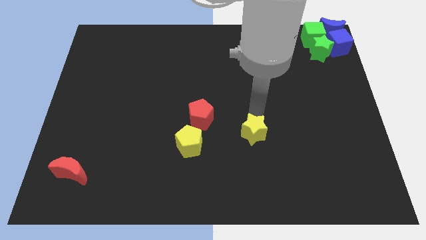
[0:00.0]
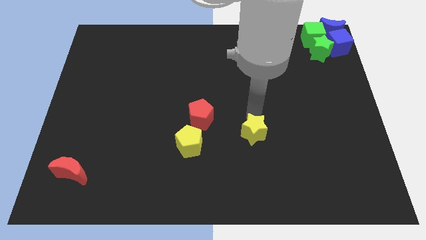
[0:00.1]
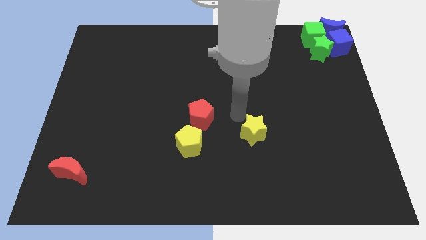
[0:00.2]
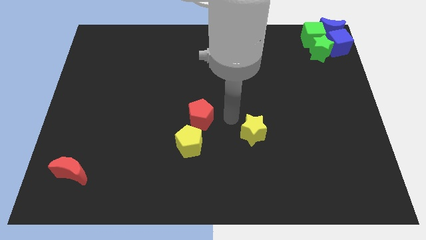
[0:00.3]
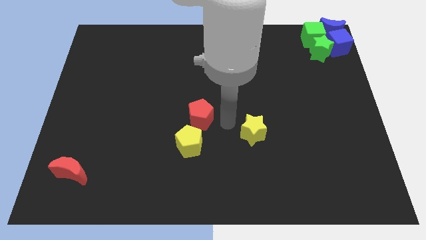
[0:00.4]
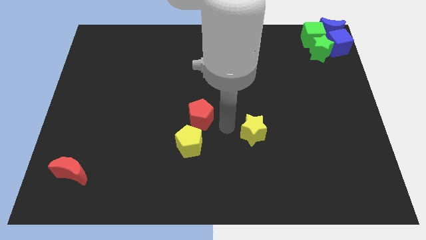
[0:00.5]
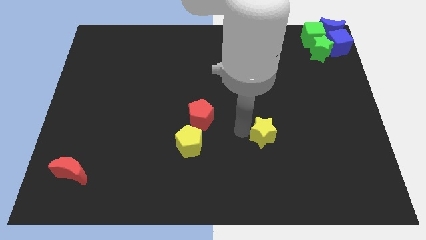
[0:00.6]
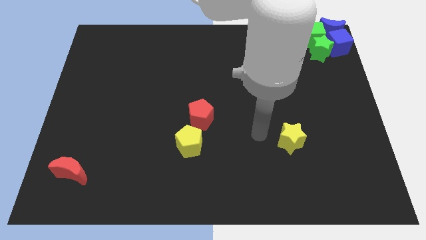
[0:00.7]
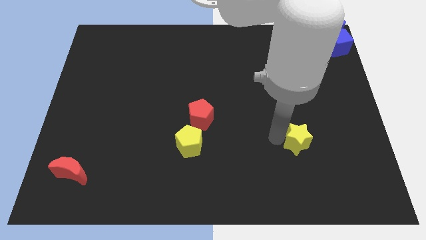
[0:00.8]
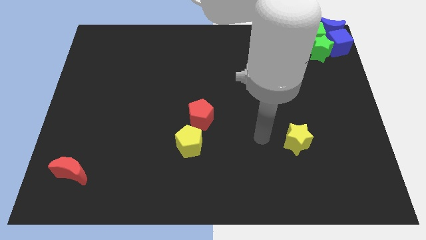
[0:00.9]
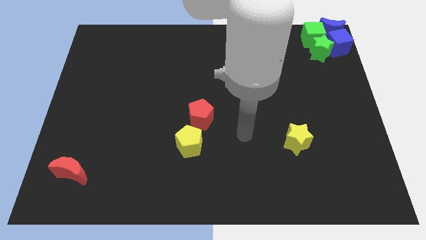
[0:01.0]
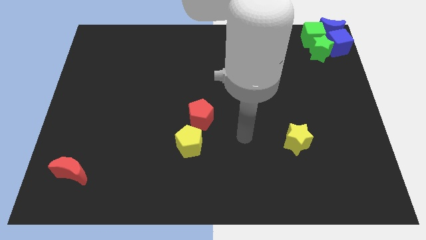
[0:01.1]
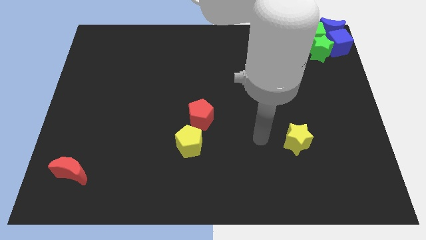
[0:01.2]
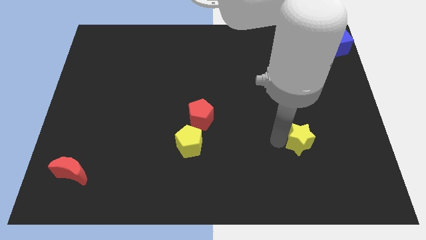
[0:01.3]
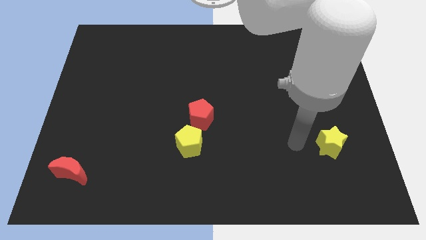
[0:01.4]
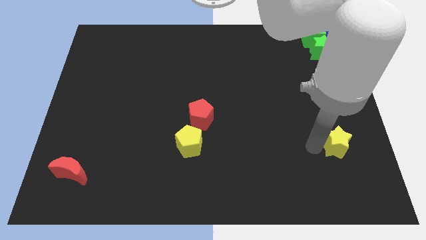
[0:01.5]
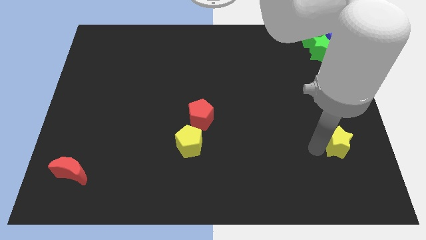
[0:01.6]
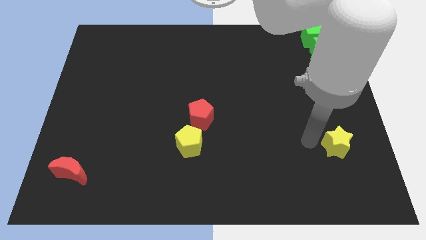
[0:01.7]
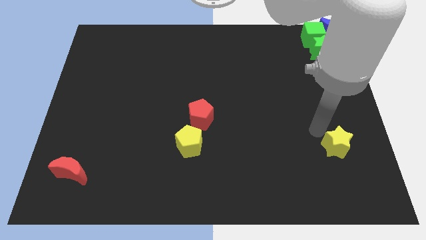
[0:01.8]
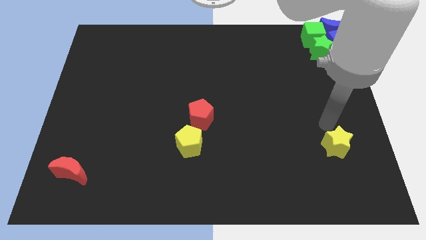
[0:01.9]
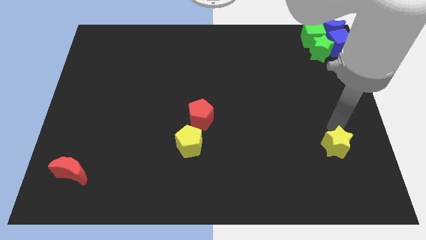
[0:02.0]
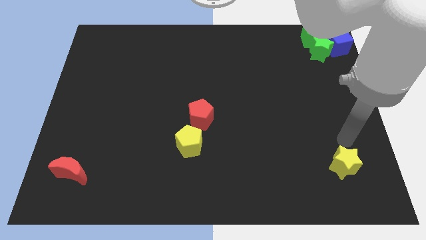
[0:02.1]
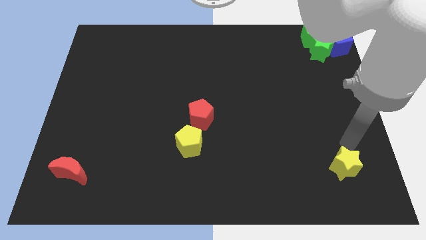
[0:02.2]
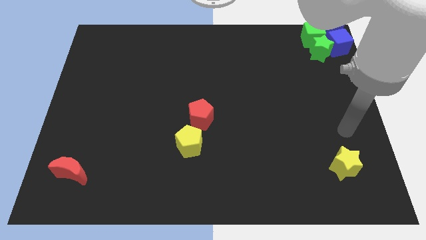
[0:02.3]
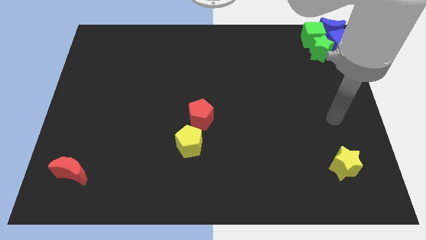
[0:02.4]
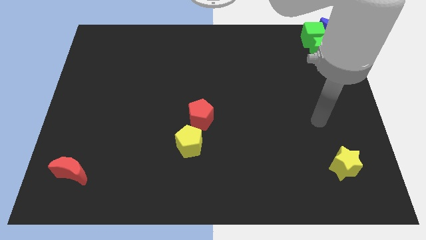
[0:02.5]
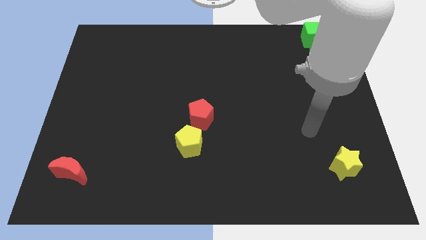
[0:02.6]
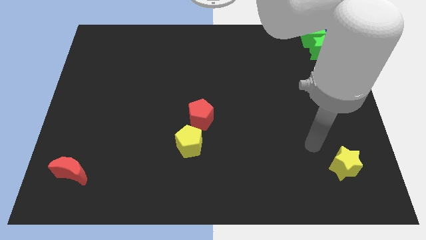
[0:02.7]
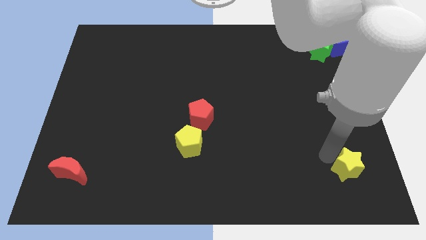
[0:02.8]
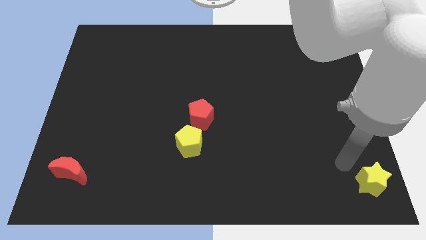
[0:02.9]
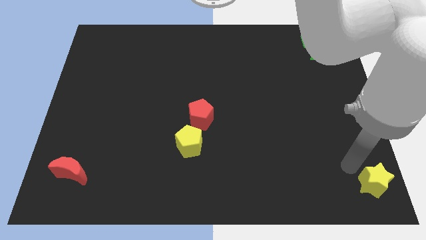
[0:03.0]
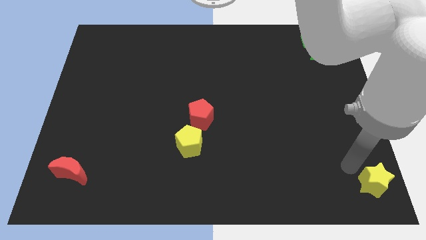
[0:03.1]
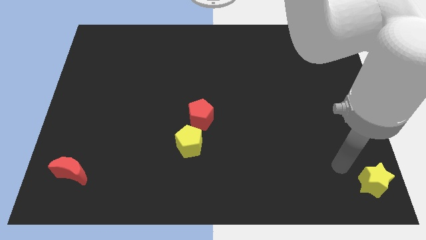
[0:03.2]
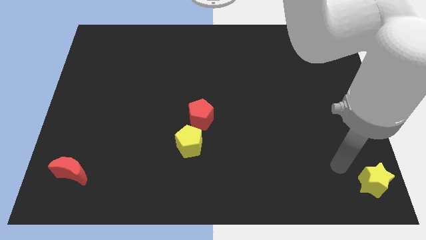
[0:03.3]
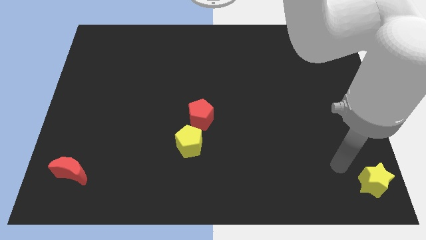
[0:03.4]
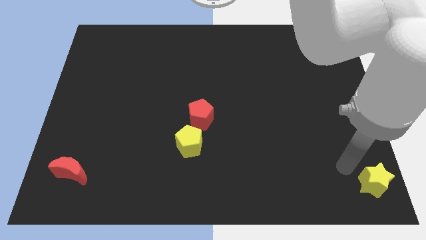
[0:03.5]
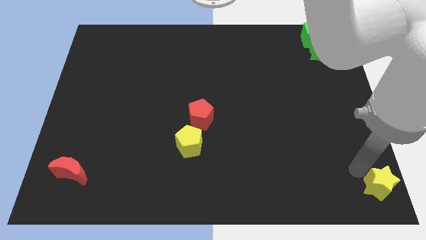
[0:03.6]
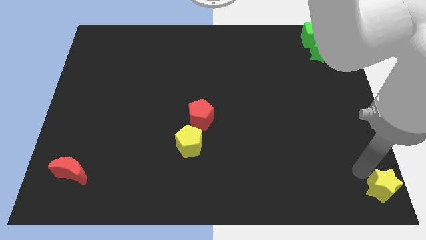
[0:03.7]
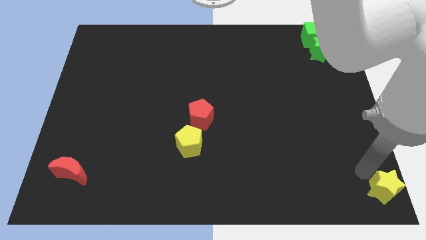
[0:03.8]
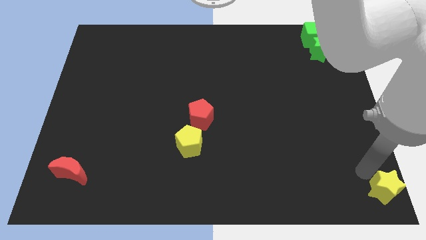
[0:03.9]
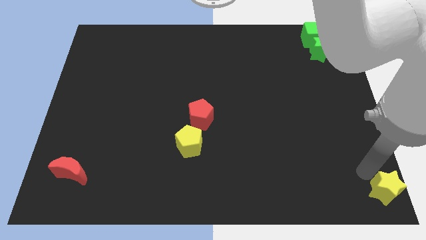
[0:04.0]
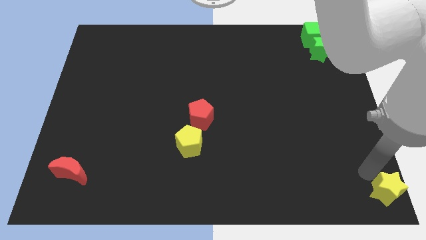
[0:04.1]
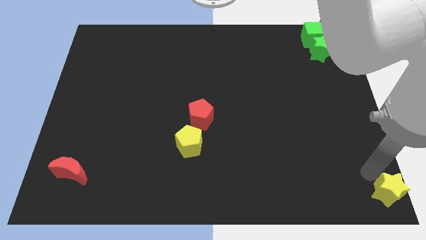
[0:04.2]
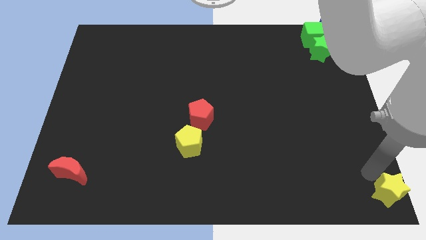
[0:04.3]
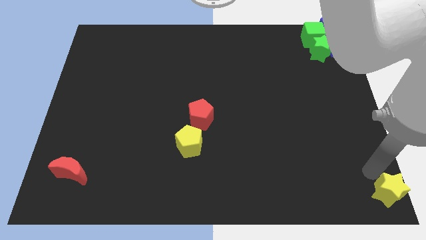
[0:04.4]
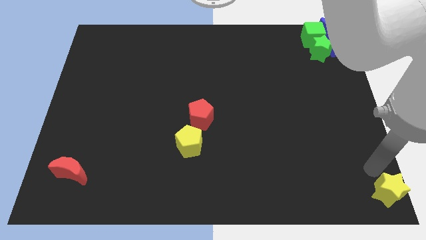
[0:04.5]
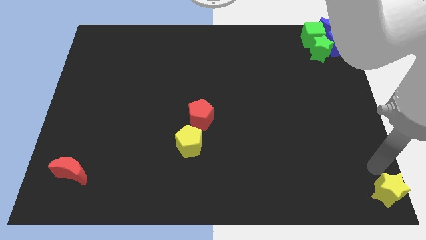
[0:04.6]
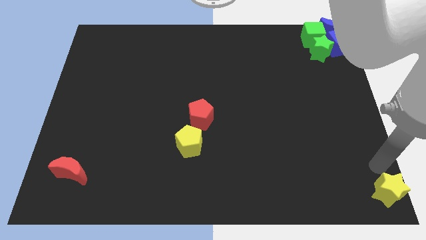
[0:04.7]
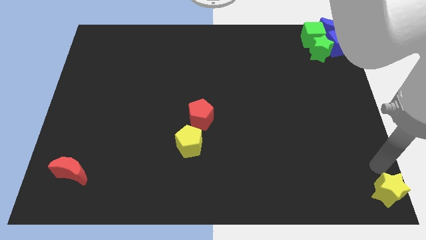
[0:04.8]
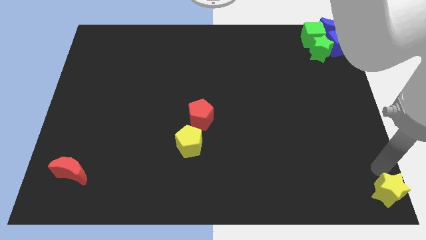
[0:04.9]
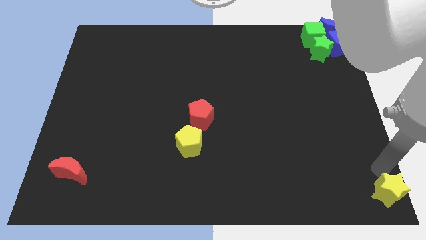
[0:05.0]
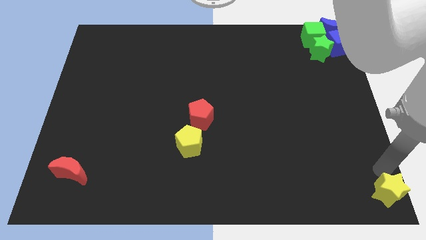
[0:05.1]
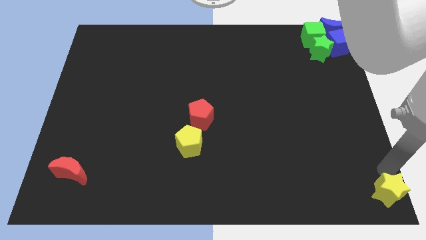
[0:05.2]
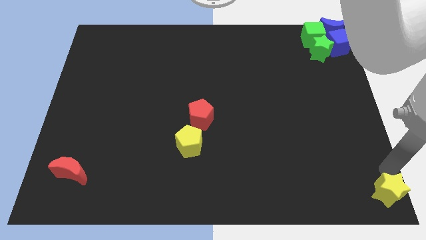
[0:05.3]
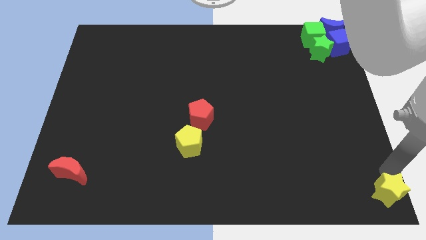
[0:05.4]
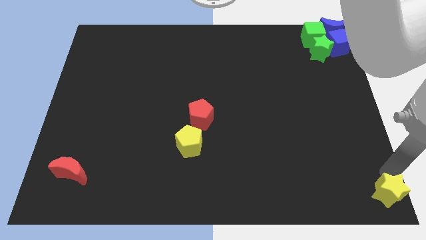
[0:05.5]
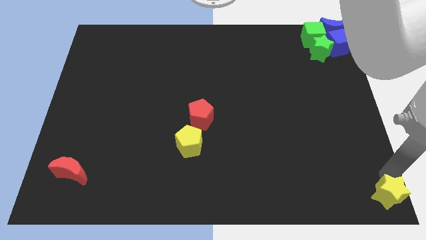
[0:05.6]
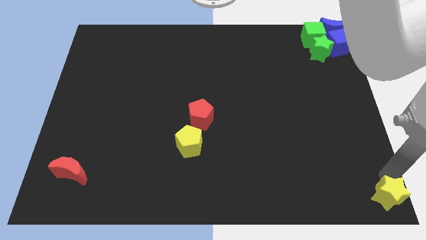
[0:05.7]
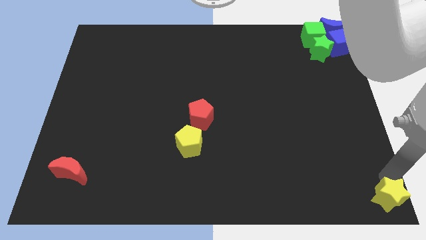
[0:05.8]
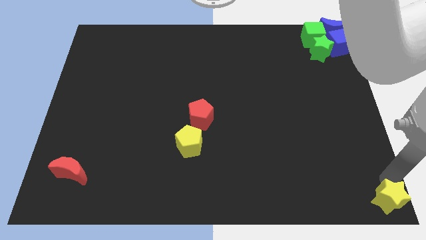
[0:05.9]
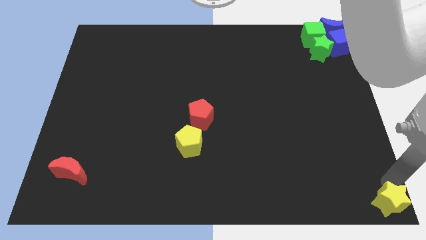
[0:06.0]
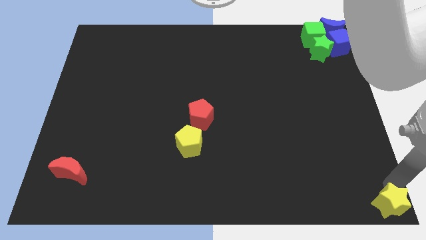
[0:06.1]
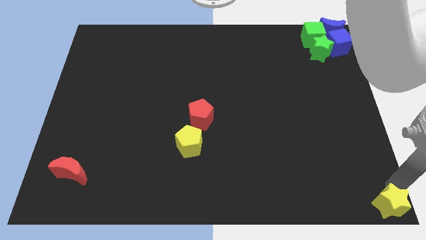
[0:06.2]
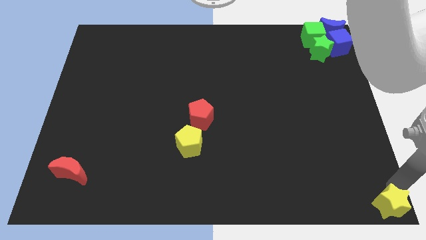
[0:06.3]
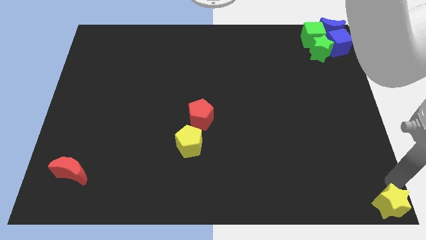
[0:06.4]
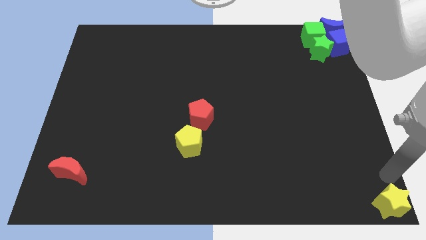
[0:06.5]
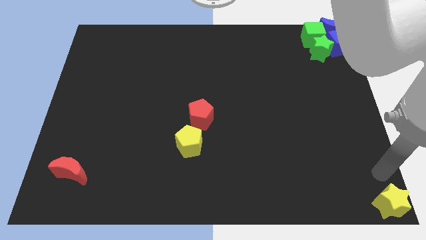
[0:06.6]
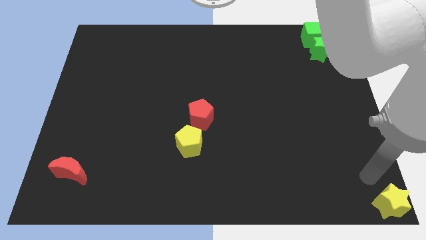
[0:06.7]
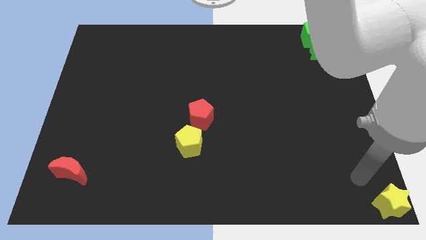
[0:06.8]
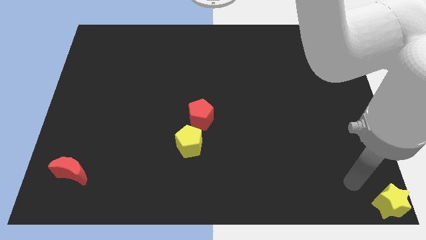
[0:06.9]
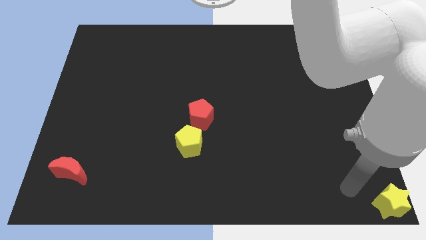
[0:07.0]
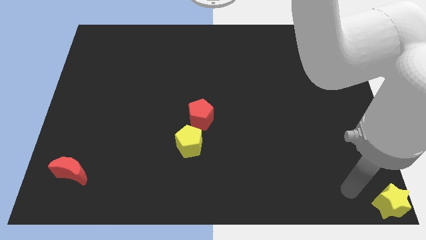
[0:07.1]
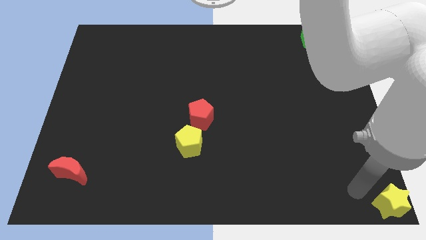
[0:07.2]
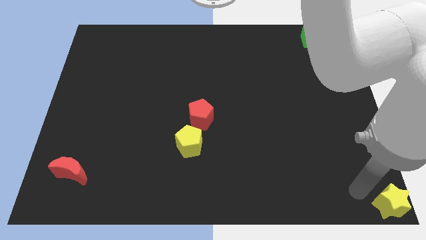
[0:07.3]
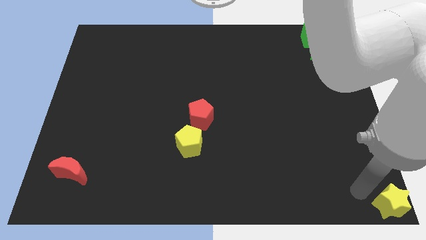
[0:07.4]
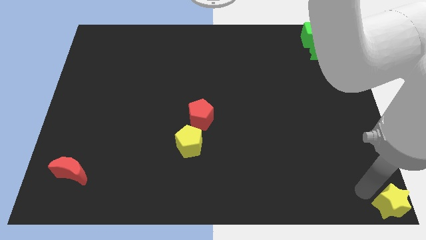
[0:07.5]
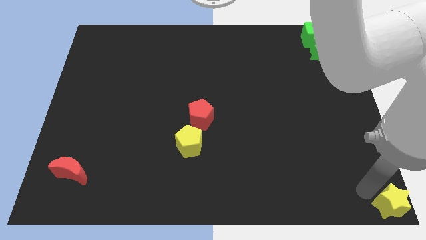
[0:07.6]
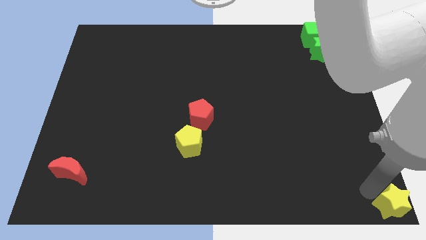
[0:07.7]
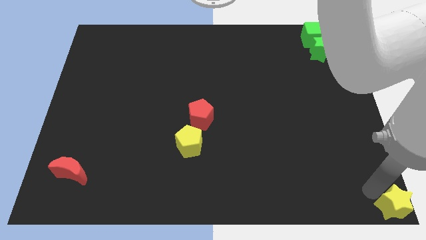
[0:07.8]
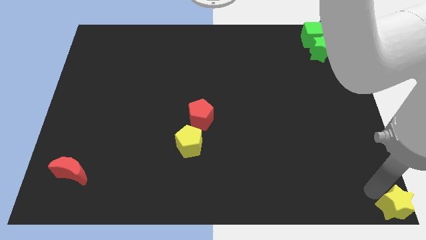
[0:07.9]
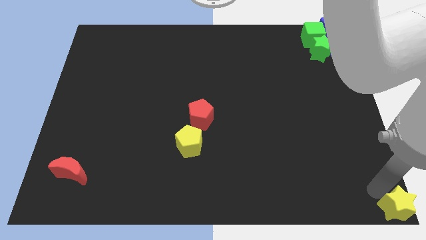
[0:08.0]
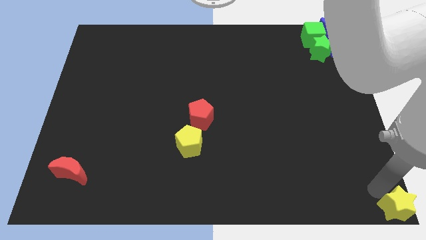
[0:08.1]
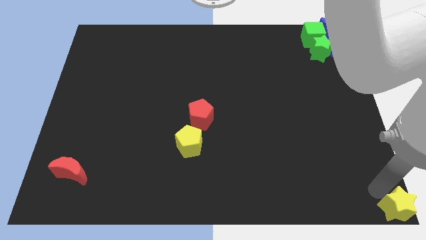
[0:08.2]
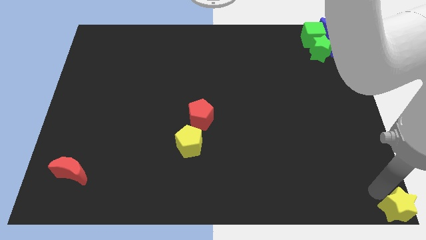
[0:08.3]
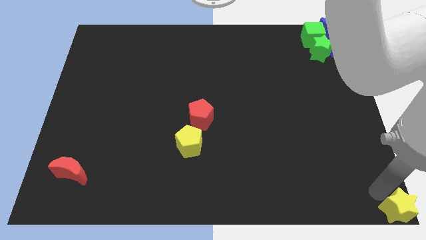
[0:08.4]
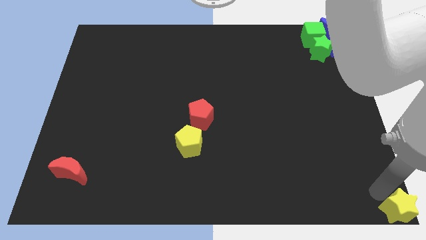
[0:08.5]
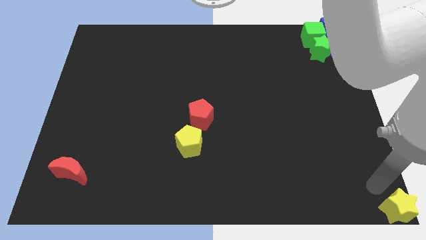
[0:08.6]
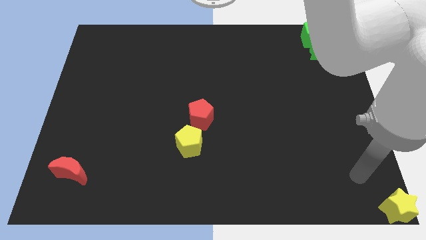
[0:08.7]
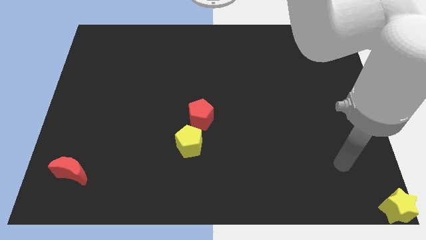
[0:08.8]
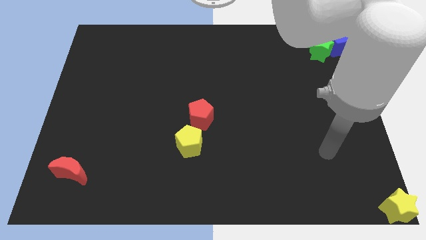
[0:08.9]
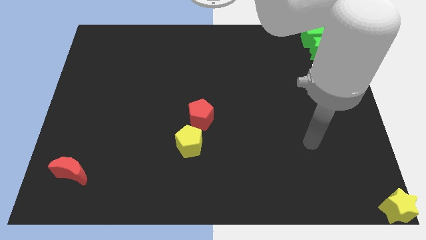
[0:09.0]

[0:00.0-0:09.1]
place the yellow star at the bottom right corner of the board
